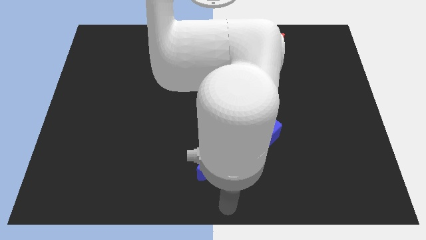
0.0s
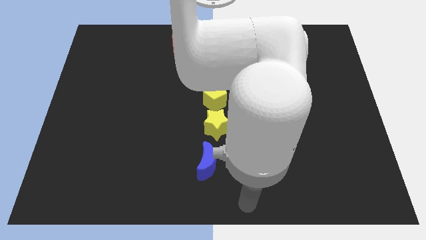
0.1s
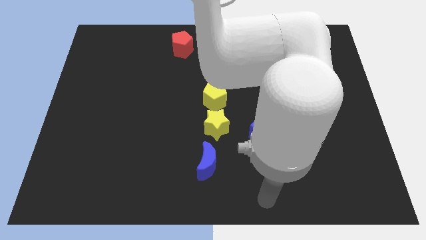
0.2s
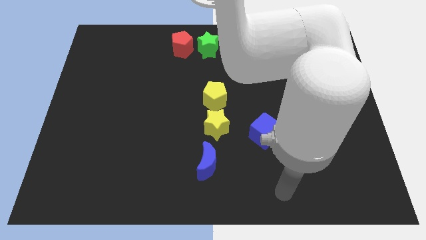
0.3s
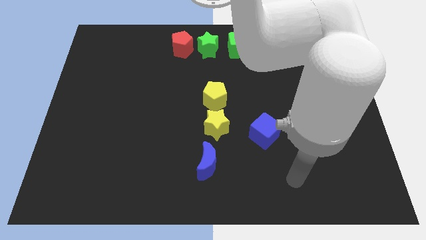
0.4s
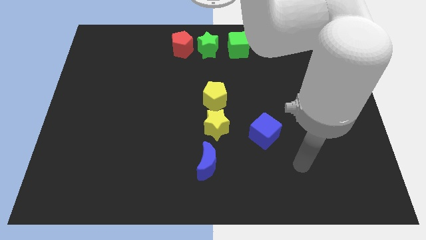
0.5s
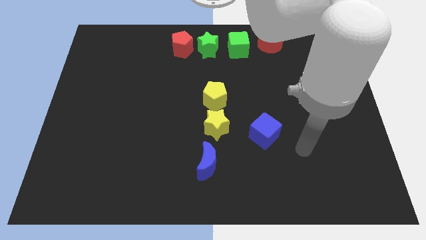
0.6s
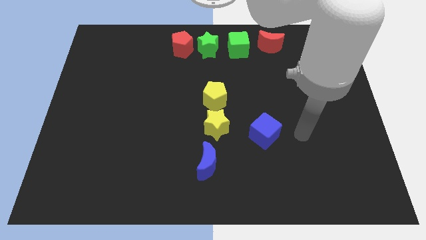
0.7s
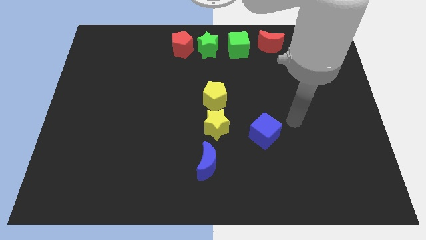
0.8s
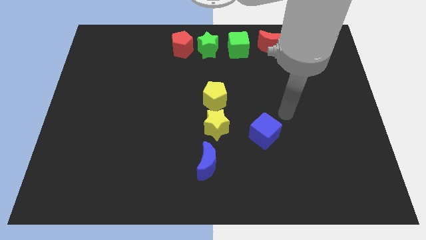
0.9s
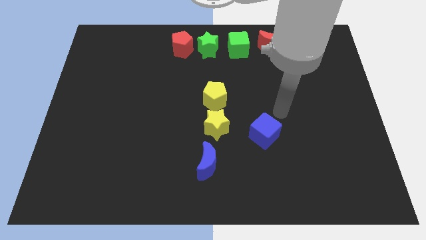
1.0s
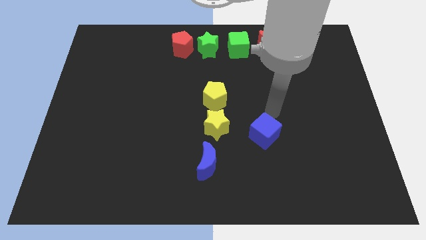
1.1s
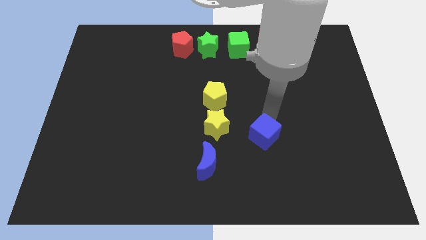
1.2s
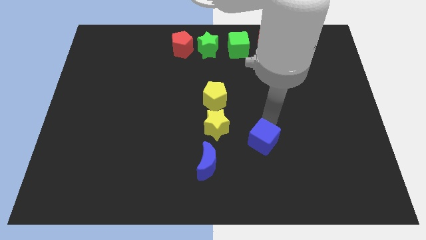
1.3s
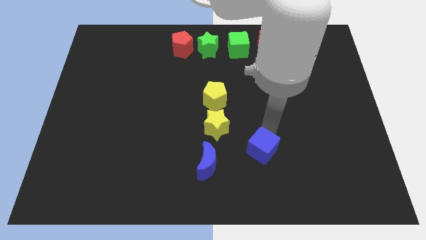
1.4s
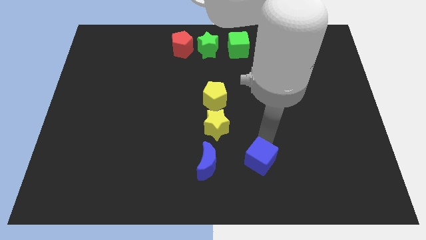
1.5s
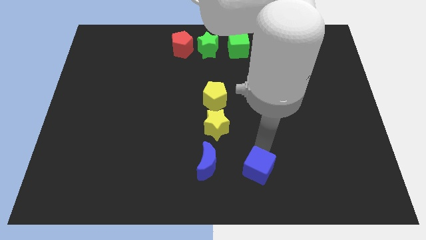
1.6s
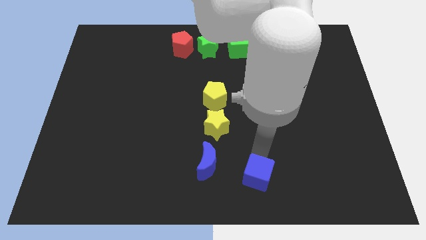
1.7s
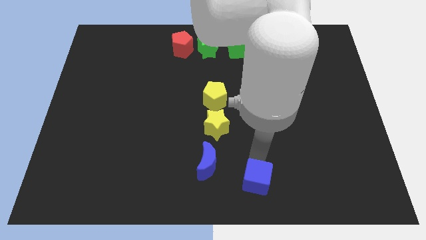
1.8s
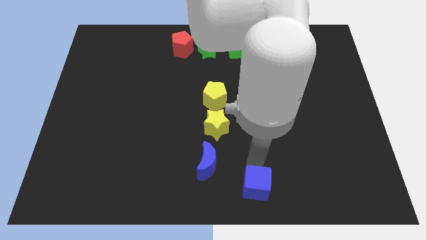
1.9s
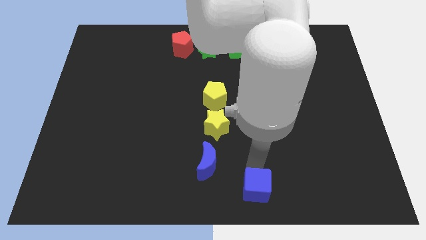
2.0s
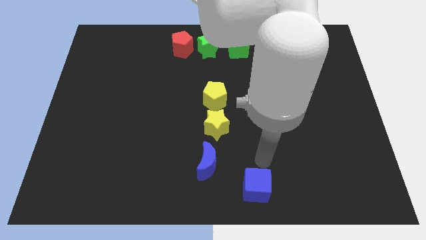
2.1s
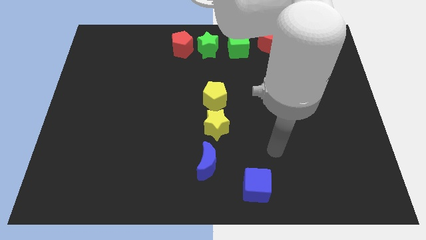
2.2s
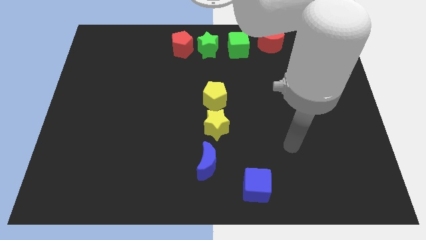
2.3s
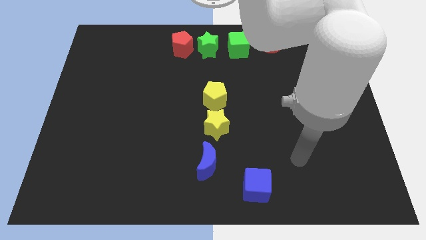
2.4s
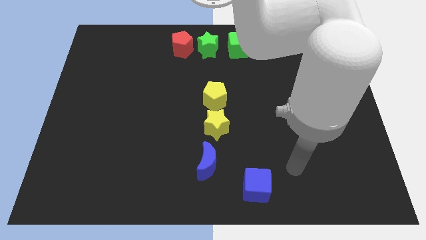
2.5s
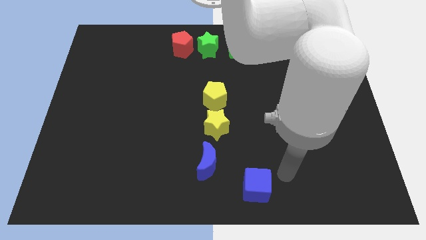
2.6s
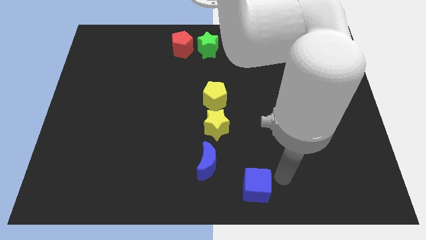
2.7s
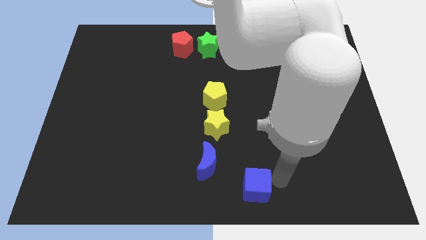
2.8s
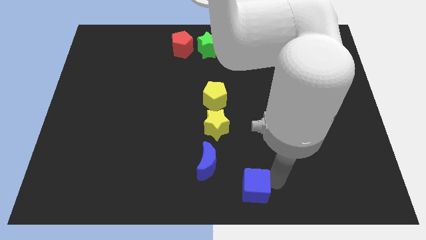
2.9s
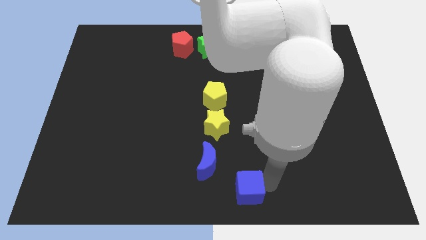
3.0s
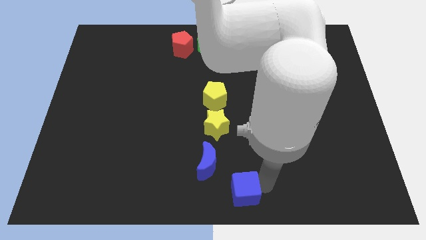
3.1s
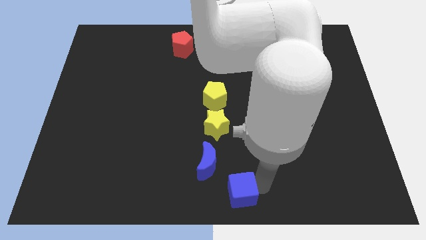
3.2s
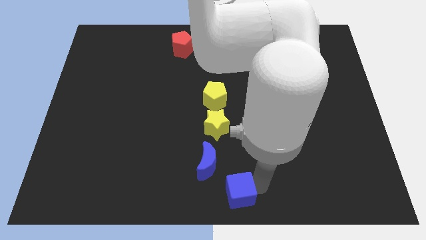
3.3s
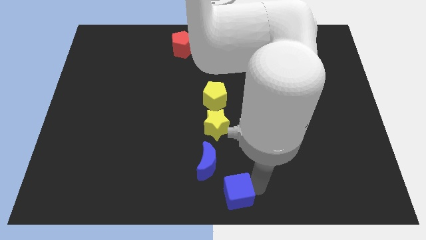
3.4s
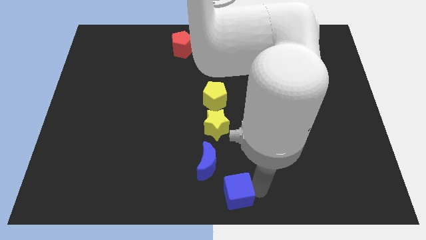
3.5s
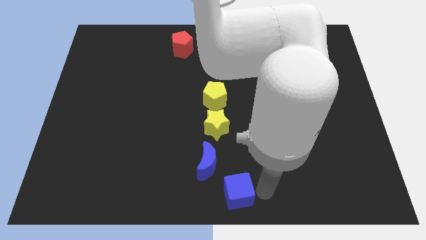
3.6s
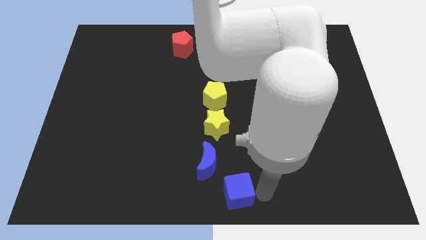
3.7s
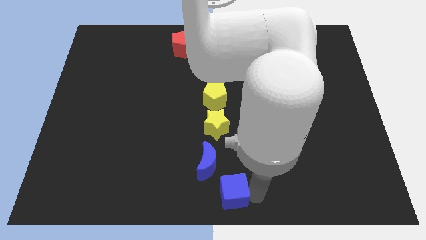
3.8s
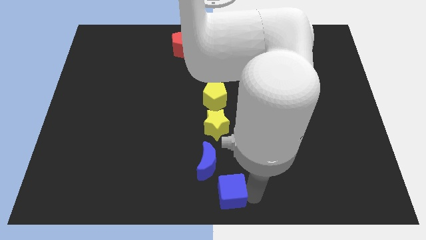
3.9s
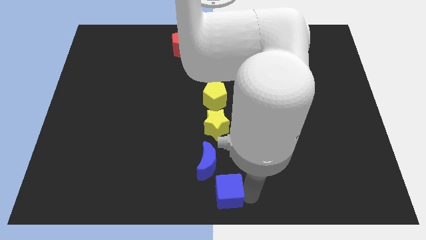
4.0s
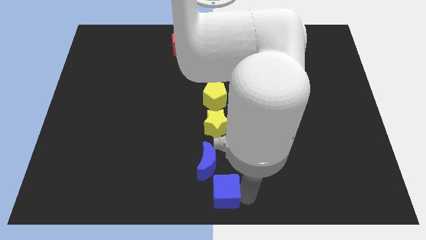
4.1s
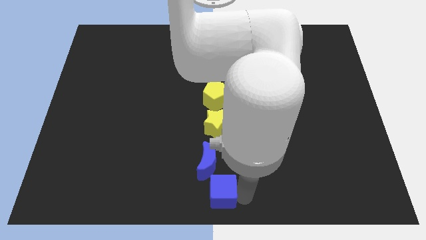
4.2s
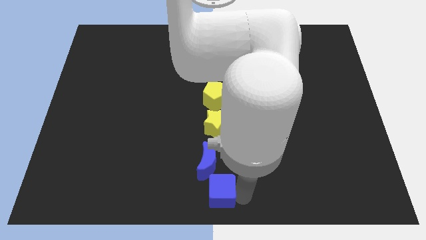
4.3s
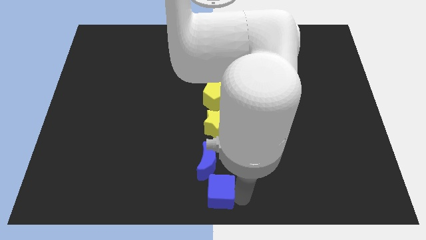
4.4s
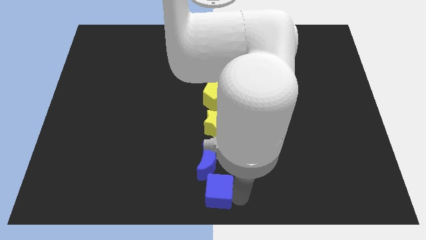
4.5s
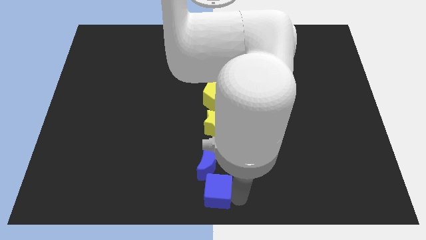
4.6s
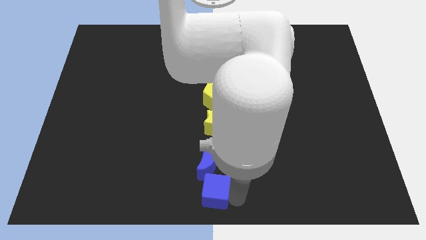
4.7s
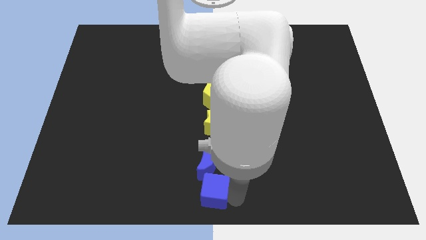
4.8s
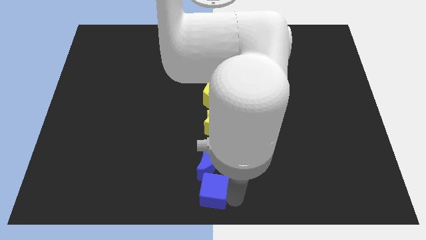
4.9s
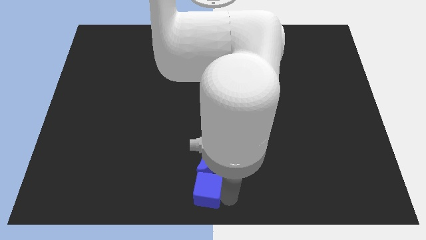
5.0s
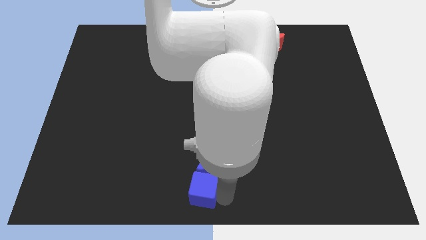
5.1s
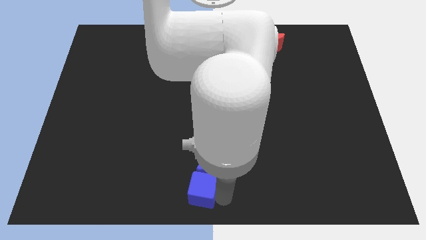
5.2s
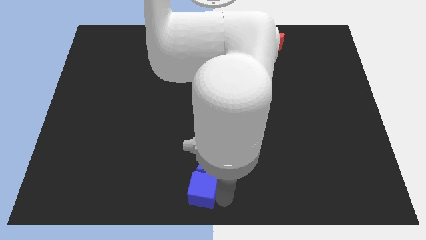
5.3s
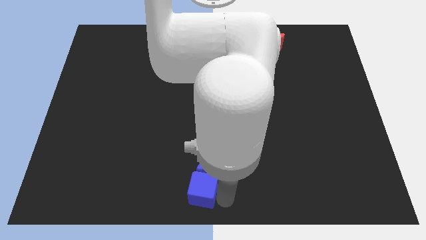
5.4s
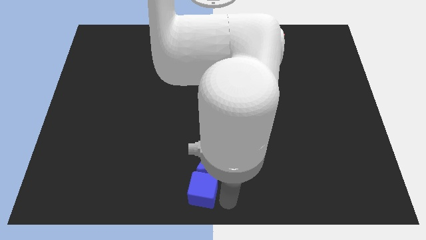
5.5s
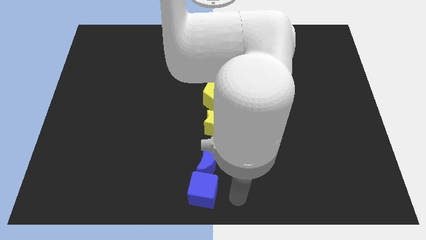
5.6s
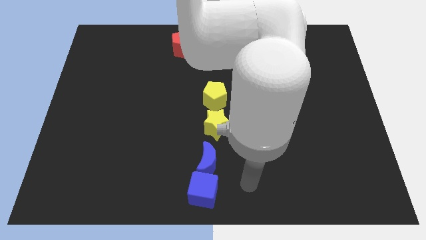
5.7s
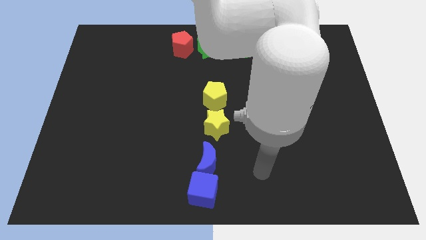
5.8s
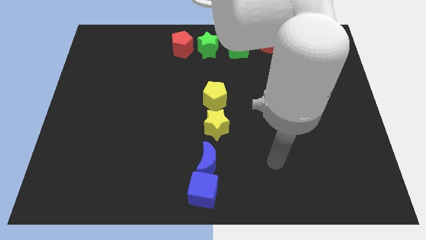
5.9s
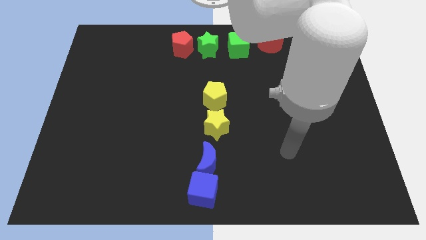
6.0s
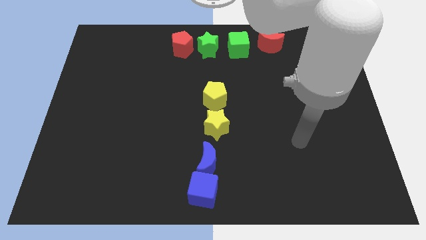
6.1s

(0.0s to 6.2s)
place the blue cube below the blue moon

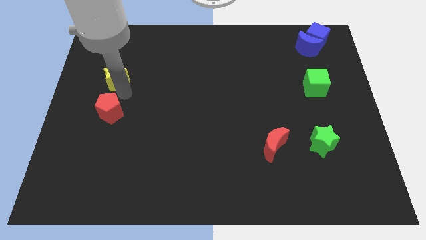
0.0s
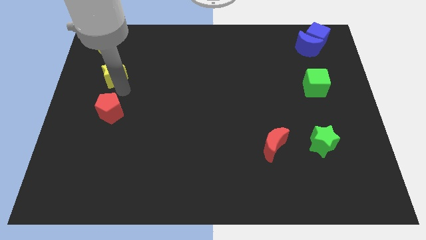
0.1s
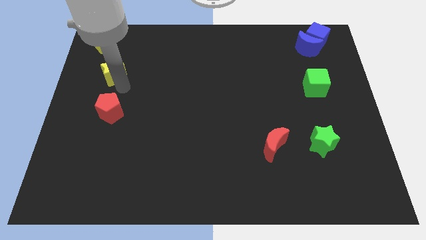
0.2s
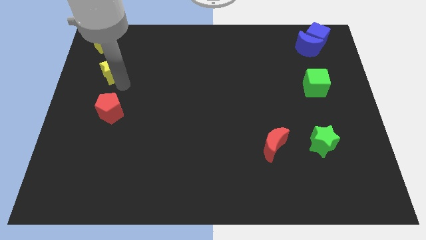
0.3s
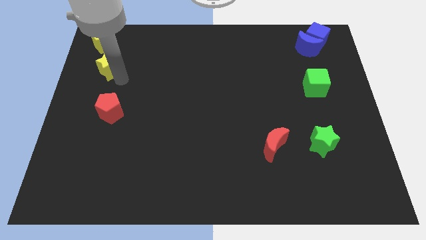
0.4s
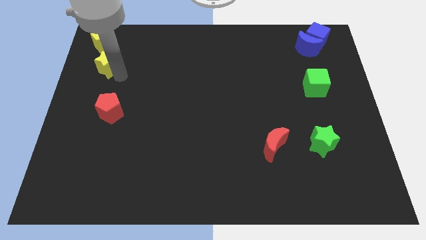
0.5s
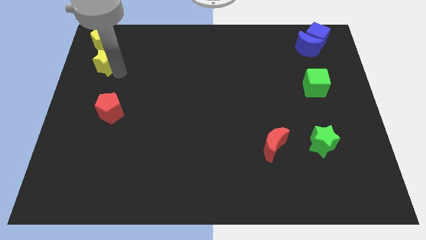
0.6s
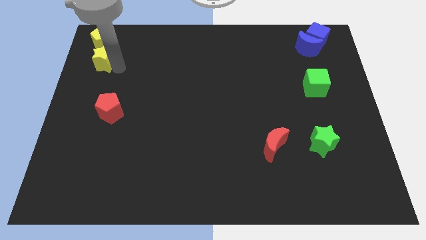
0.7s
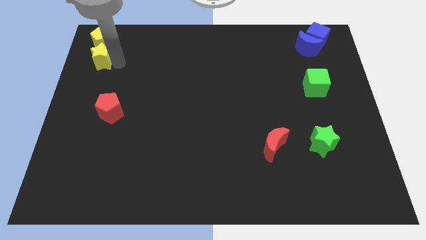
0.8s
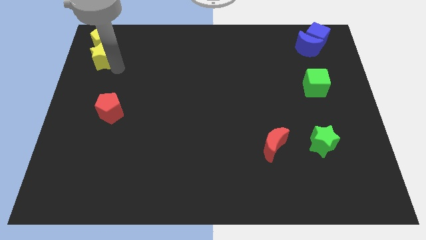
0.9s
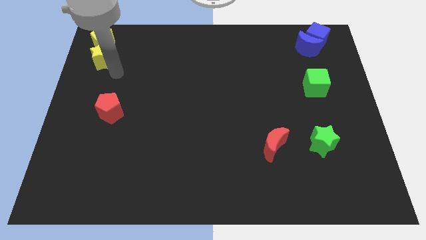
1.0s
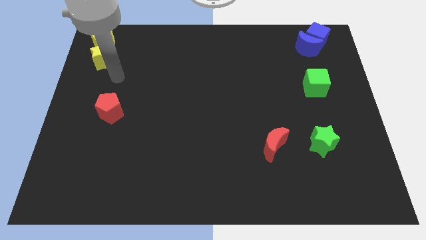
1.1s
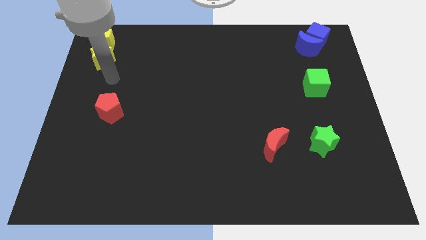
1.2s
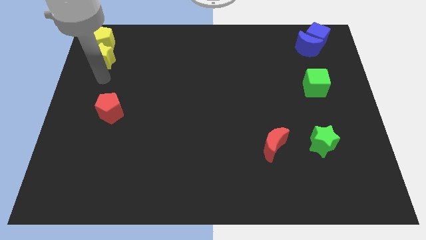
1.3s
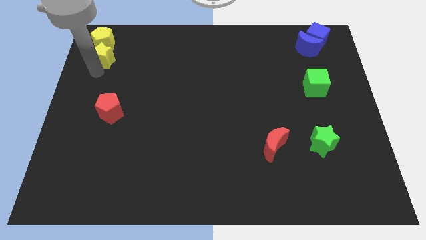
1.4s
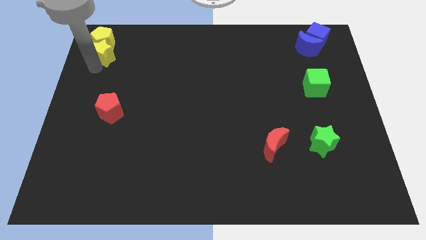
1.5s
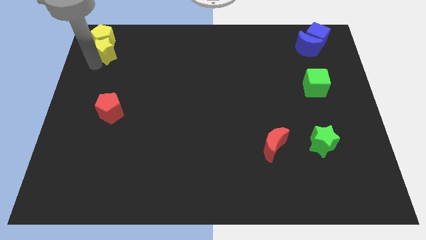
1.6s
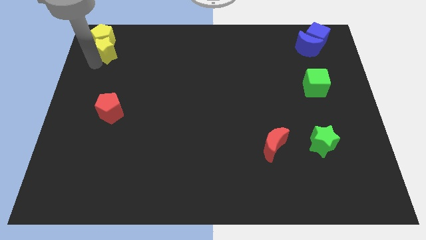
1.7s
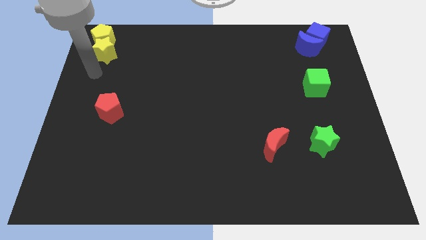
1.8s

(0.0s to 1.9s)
push the yellow star into the yellow pentagon

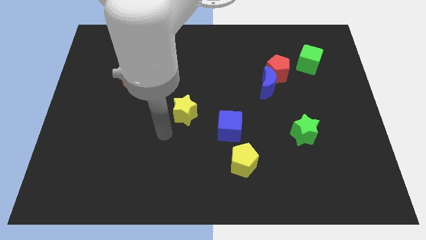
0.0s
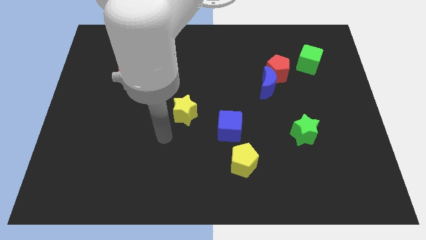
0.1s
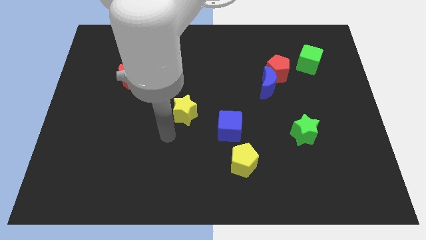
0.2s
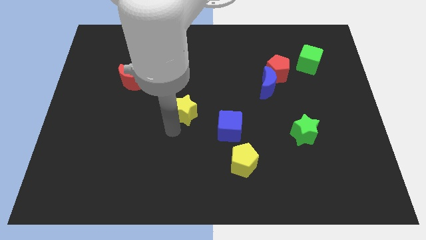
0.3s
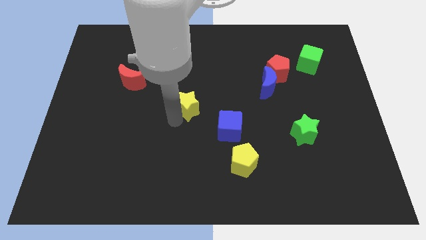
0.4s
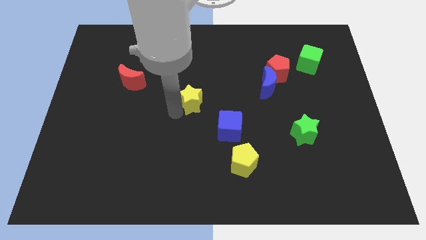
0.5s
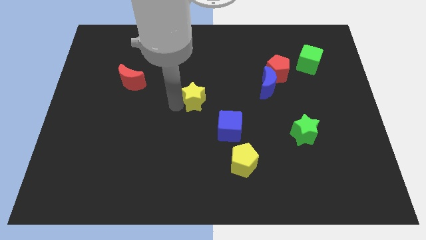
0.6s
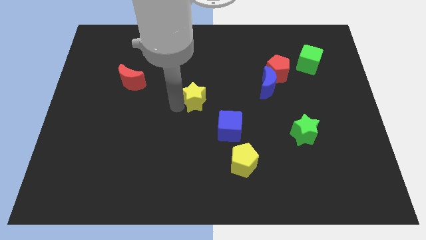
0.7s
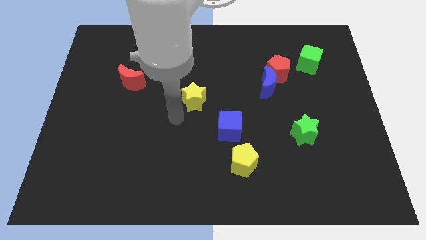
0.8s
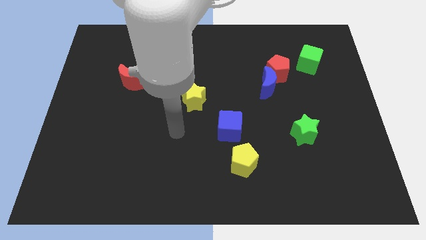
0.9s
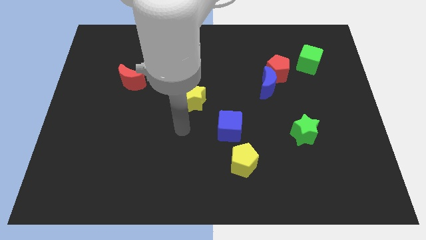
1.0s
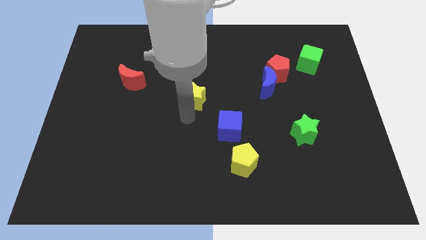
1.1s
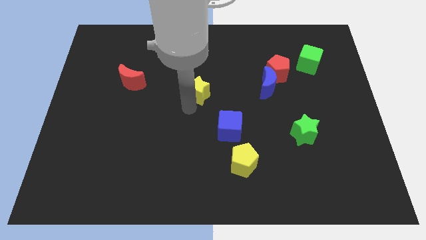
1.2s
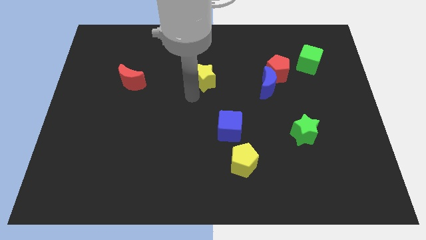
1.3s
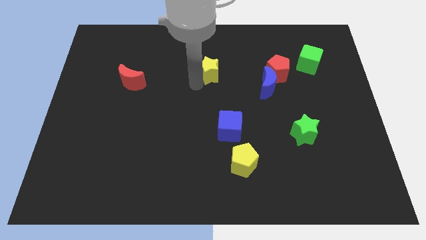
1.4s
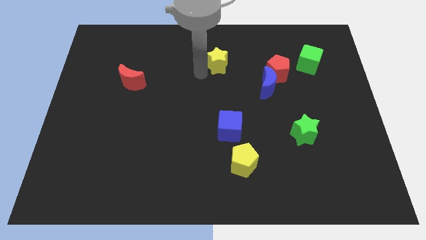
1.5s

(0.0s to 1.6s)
put the yellow star horizontally right to the red moon
